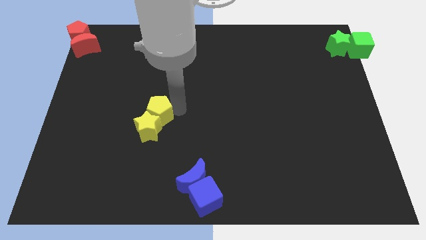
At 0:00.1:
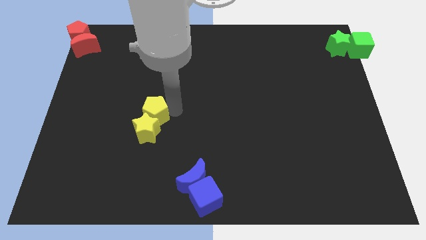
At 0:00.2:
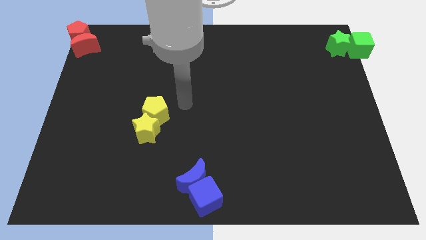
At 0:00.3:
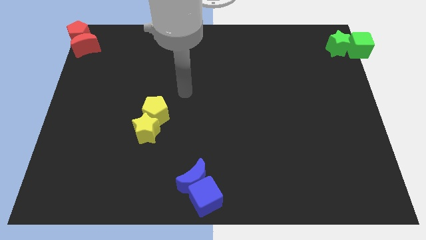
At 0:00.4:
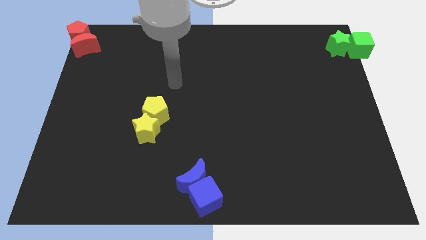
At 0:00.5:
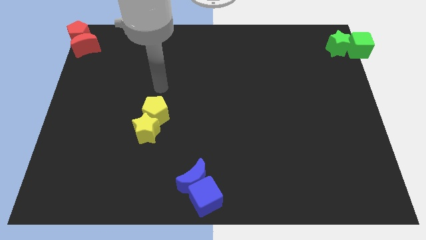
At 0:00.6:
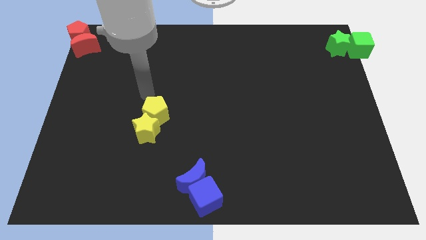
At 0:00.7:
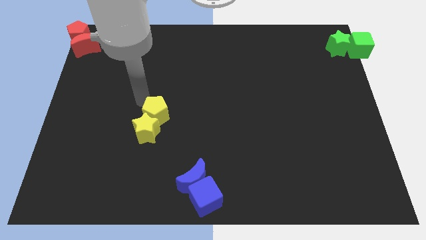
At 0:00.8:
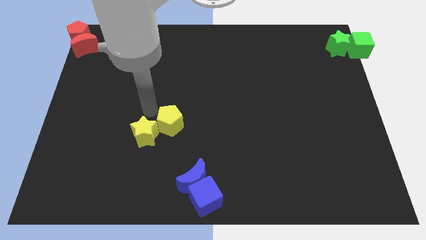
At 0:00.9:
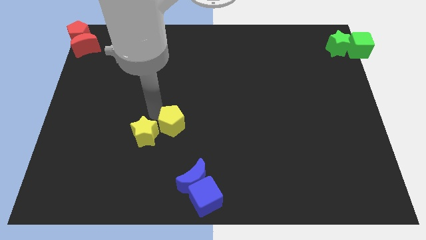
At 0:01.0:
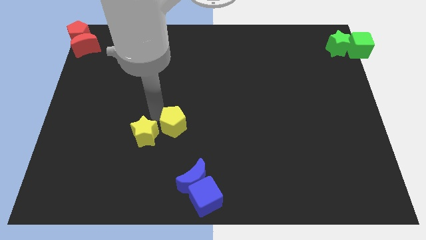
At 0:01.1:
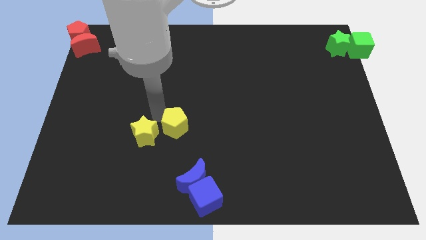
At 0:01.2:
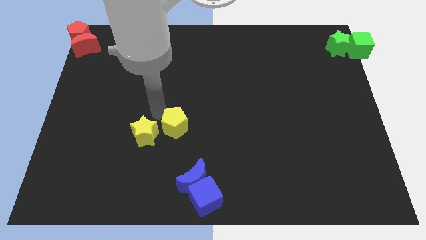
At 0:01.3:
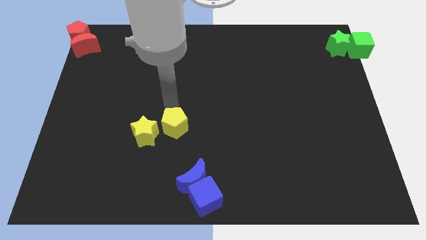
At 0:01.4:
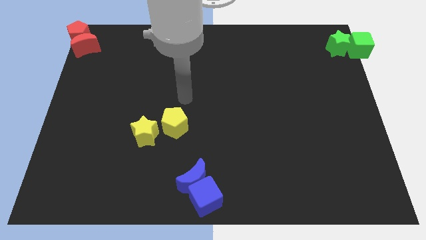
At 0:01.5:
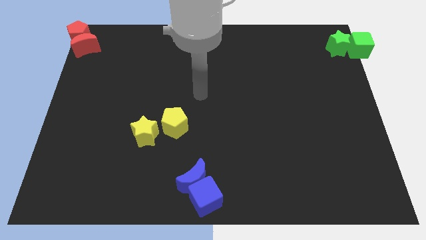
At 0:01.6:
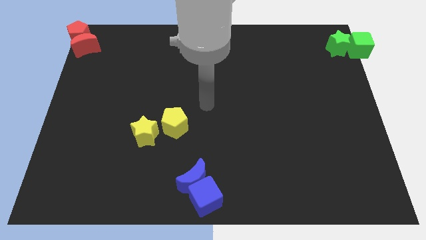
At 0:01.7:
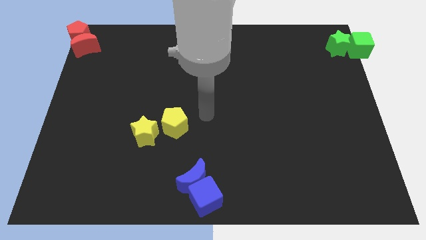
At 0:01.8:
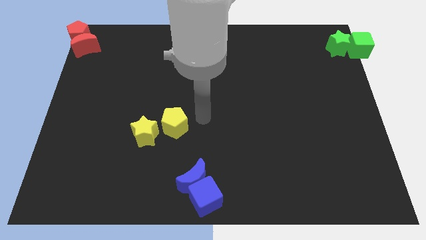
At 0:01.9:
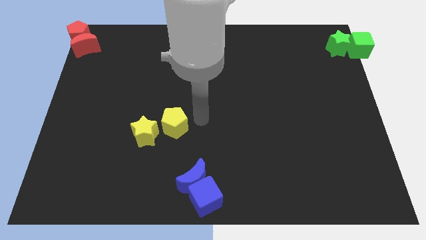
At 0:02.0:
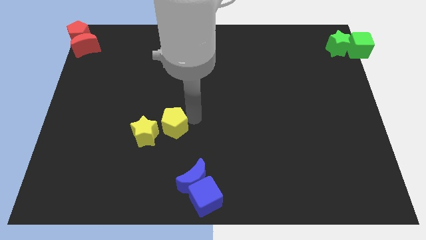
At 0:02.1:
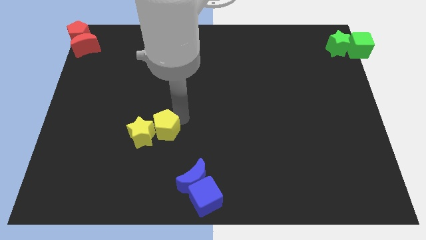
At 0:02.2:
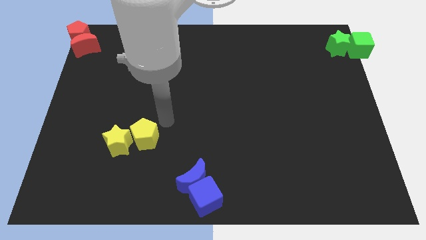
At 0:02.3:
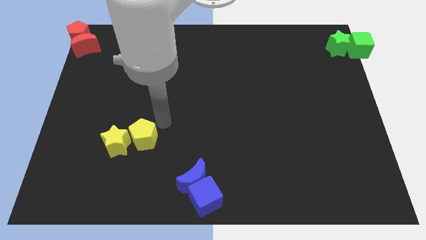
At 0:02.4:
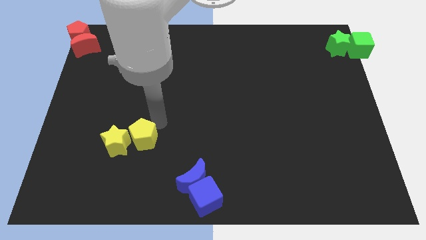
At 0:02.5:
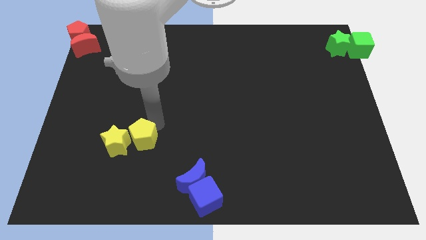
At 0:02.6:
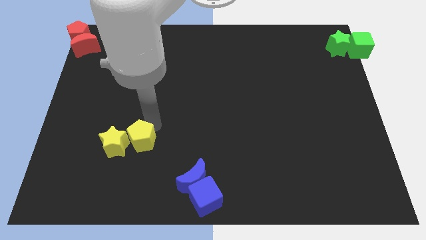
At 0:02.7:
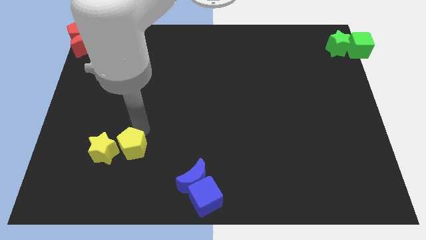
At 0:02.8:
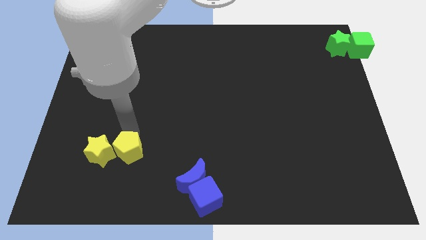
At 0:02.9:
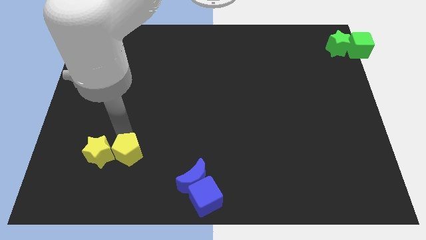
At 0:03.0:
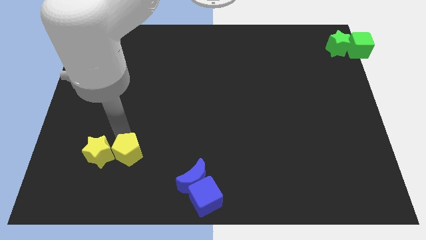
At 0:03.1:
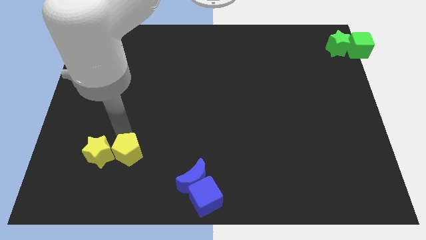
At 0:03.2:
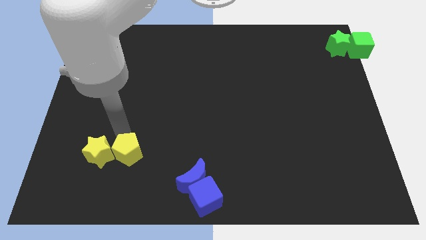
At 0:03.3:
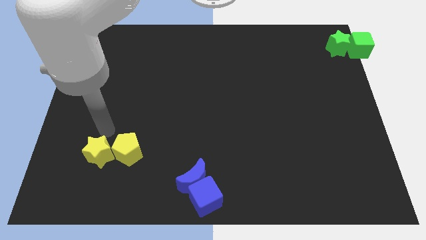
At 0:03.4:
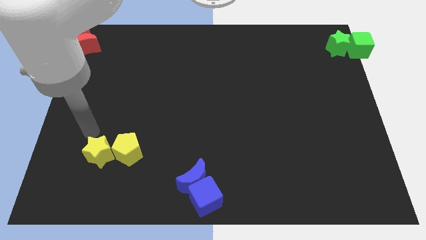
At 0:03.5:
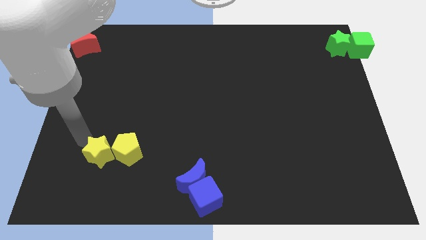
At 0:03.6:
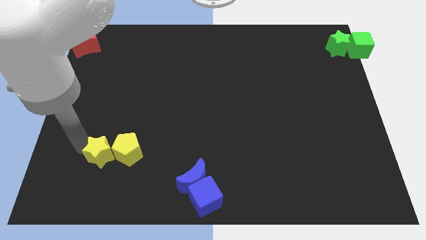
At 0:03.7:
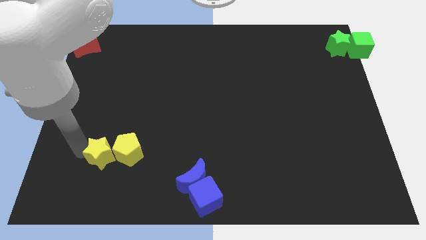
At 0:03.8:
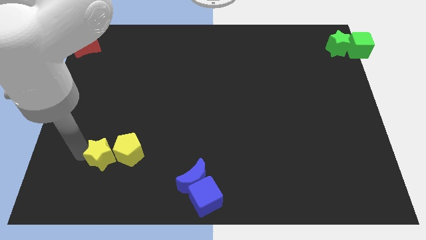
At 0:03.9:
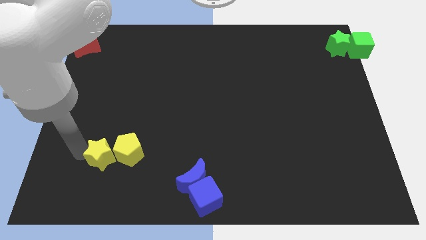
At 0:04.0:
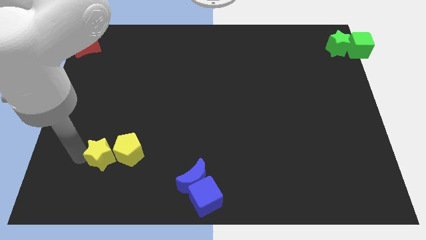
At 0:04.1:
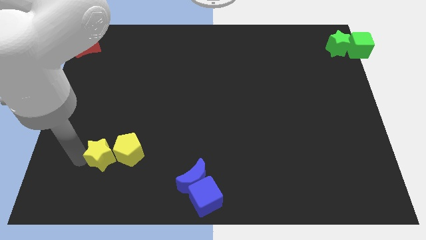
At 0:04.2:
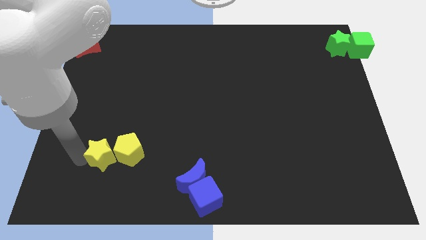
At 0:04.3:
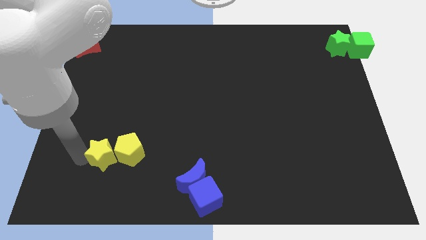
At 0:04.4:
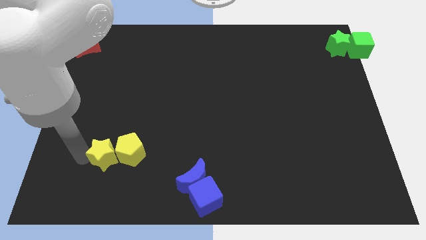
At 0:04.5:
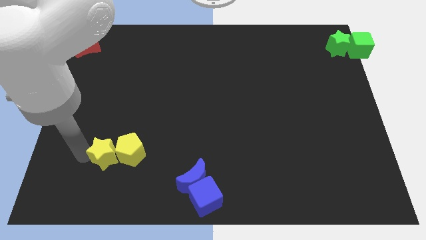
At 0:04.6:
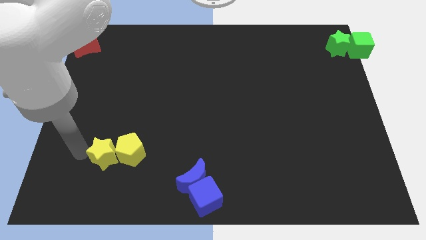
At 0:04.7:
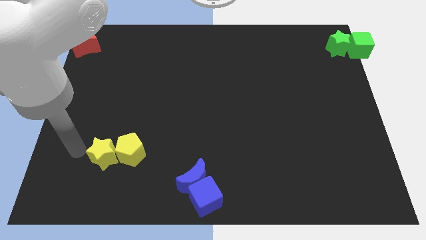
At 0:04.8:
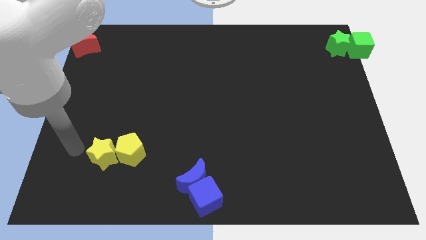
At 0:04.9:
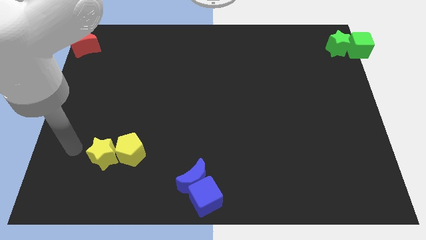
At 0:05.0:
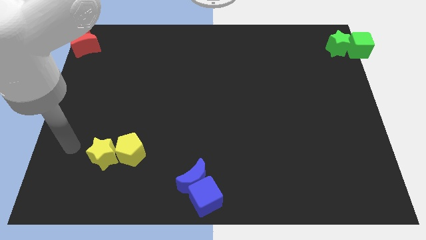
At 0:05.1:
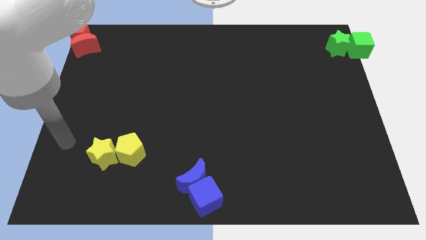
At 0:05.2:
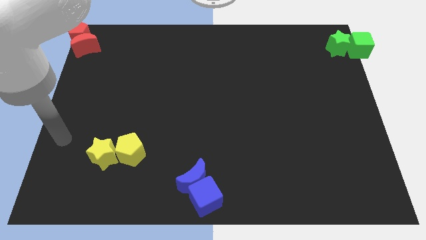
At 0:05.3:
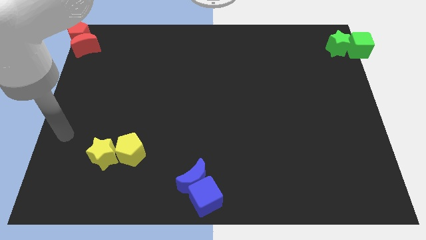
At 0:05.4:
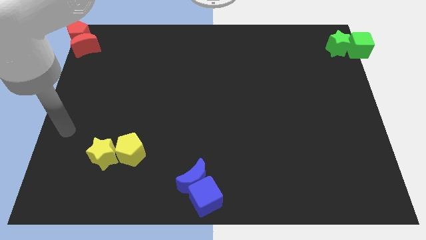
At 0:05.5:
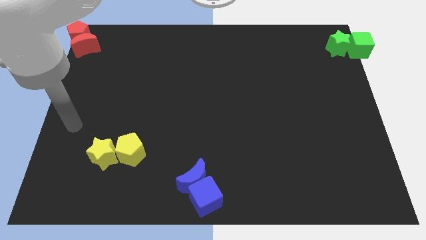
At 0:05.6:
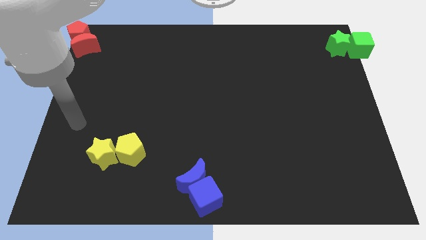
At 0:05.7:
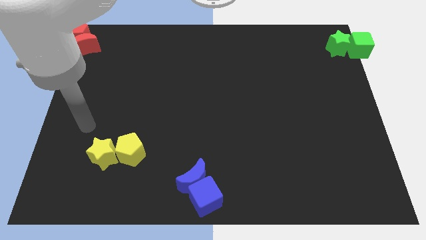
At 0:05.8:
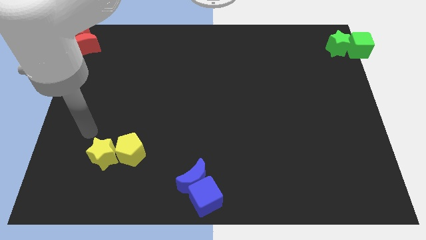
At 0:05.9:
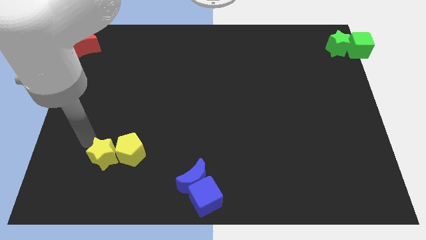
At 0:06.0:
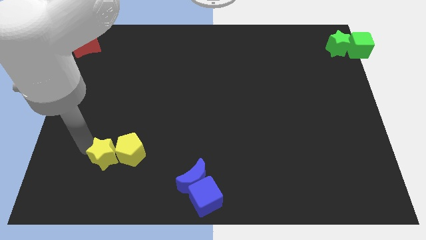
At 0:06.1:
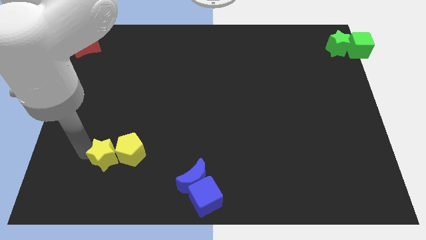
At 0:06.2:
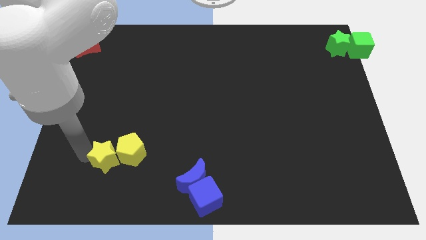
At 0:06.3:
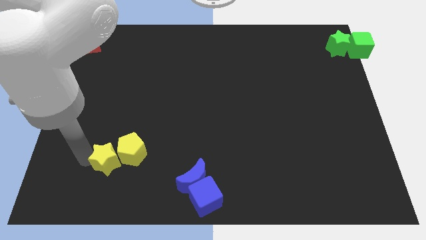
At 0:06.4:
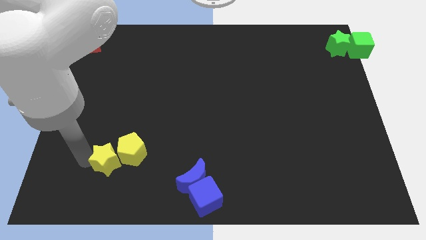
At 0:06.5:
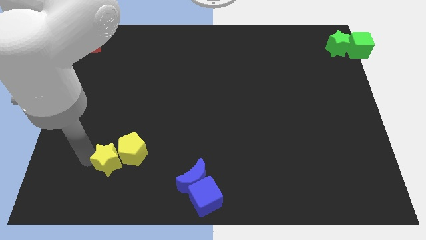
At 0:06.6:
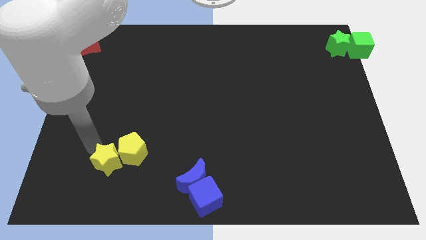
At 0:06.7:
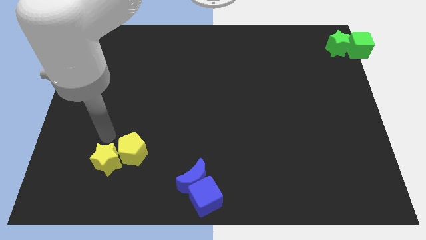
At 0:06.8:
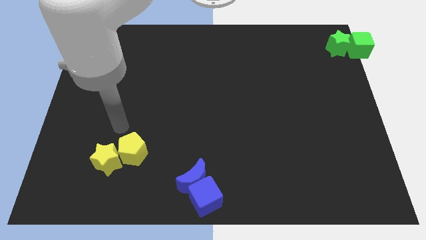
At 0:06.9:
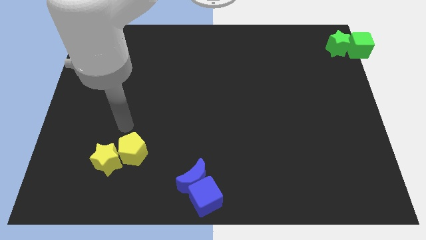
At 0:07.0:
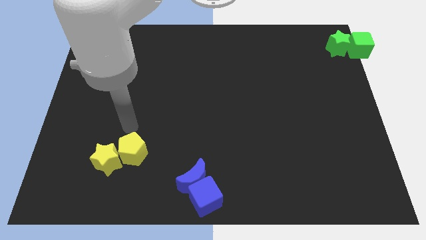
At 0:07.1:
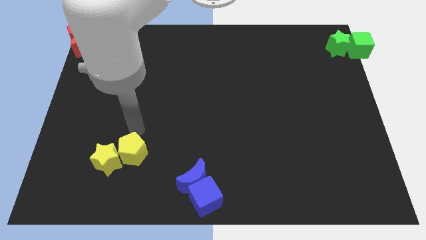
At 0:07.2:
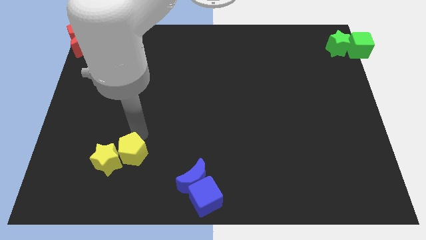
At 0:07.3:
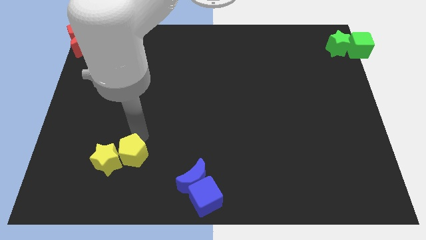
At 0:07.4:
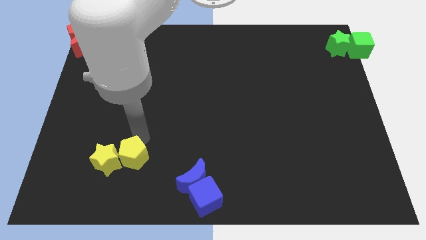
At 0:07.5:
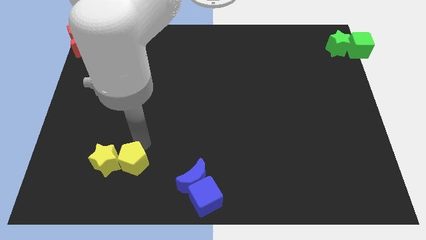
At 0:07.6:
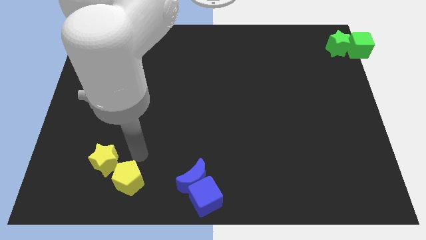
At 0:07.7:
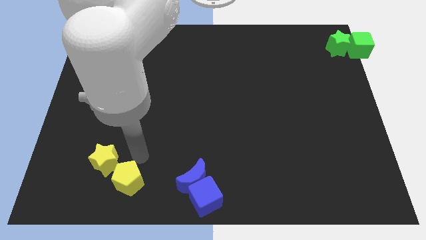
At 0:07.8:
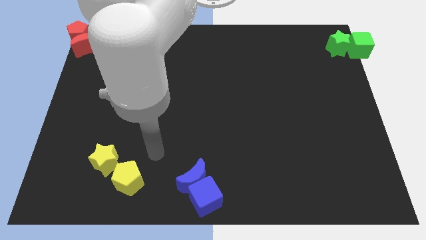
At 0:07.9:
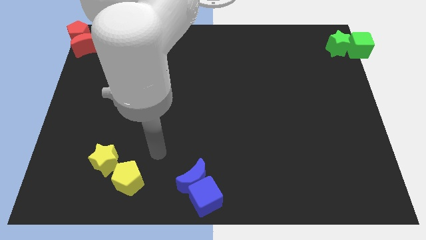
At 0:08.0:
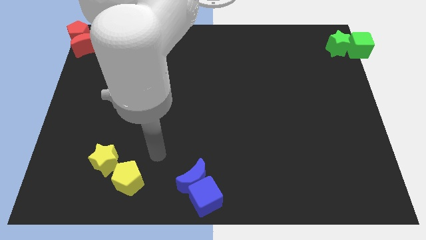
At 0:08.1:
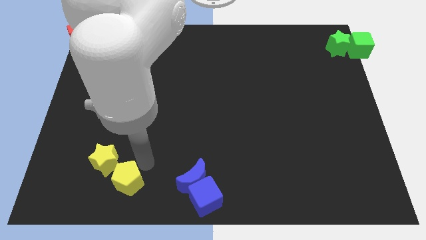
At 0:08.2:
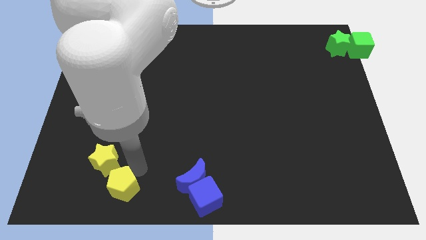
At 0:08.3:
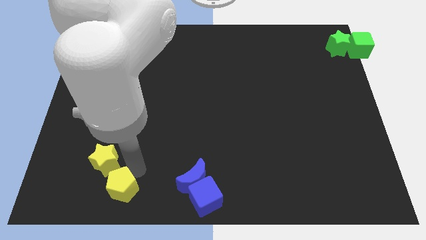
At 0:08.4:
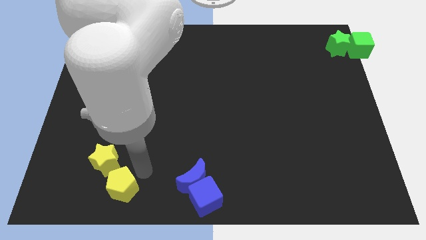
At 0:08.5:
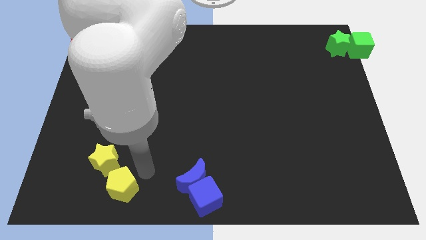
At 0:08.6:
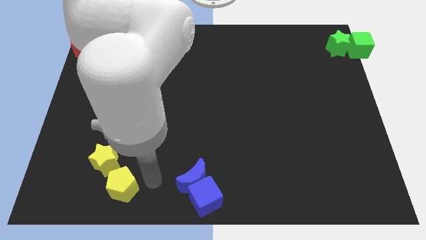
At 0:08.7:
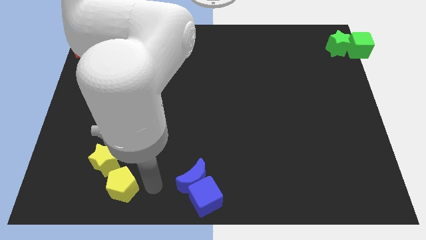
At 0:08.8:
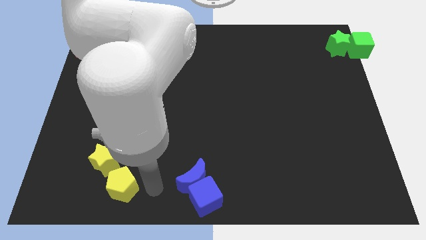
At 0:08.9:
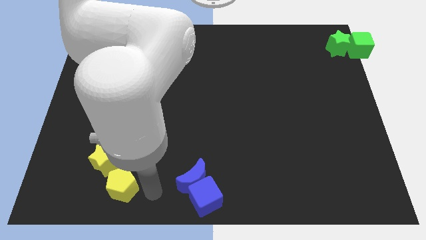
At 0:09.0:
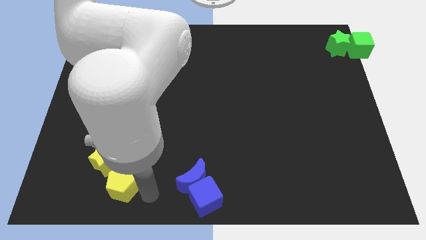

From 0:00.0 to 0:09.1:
place the yellow pentagon below the yellow star

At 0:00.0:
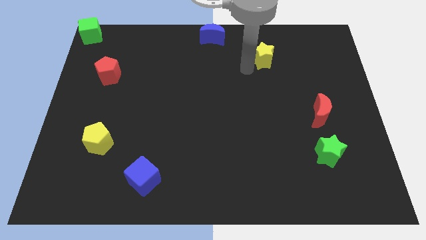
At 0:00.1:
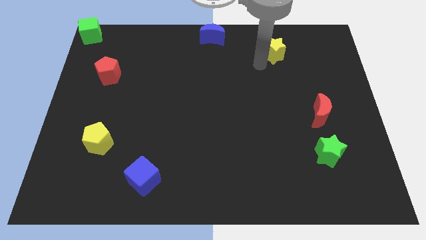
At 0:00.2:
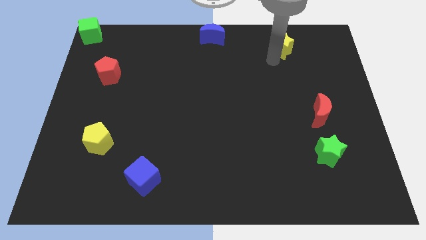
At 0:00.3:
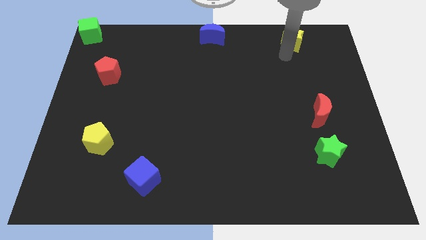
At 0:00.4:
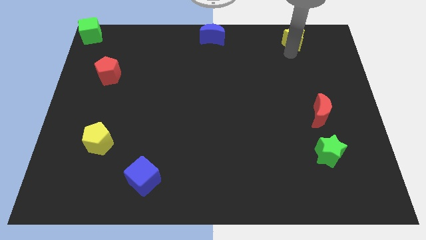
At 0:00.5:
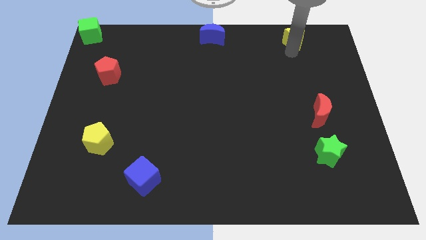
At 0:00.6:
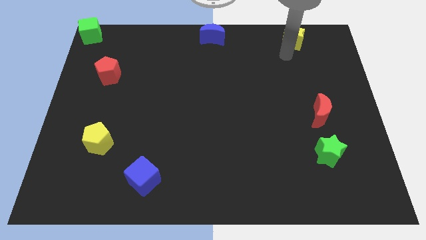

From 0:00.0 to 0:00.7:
slide the yellow star to the top right corner
